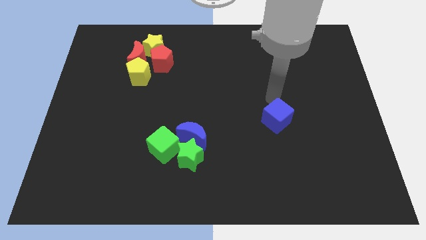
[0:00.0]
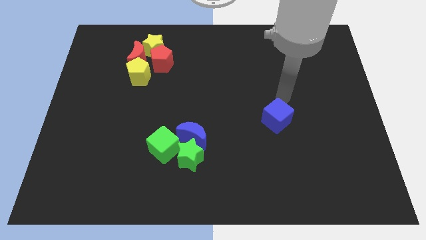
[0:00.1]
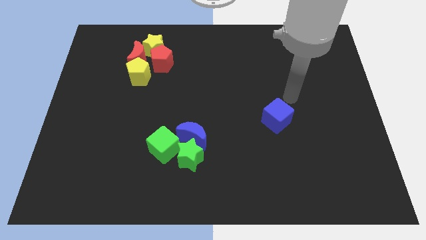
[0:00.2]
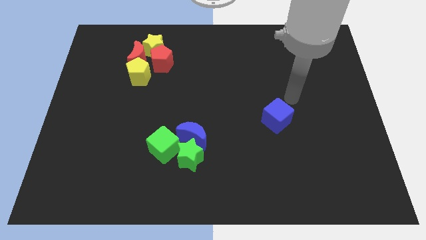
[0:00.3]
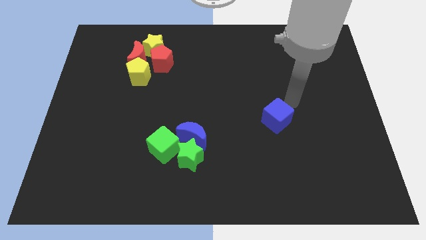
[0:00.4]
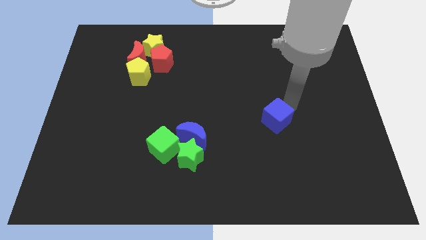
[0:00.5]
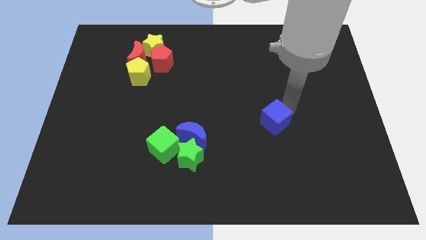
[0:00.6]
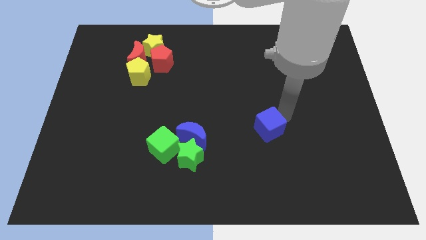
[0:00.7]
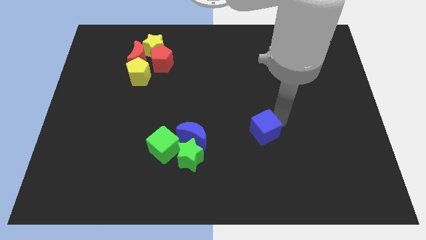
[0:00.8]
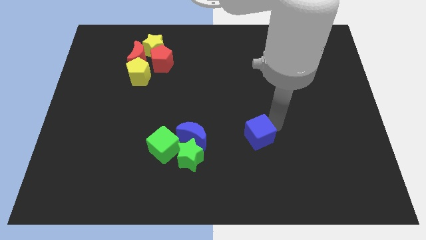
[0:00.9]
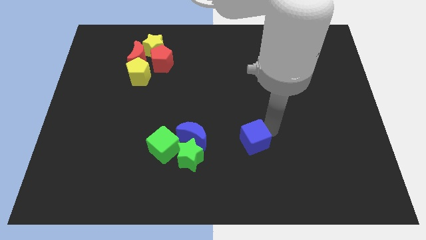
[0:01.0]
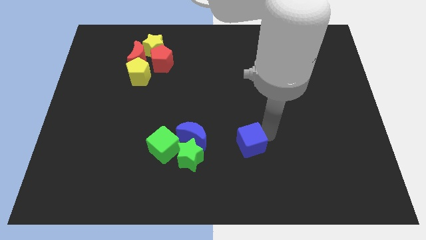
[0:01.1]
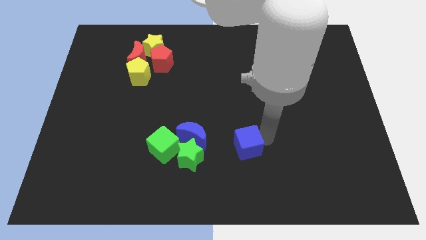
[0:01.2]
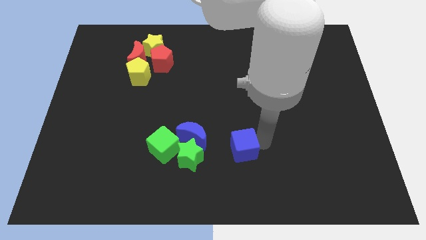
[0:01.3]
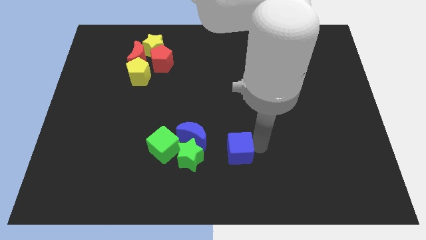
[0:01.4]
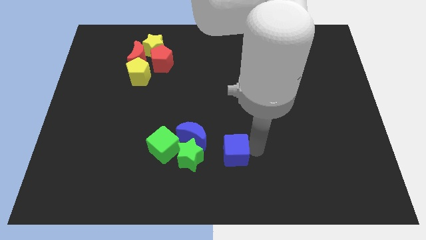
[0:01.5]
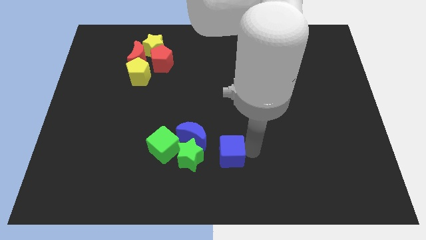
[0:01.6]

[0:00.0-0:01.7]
move the blue cube towards bottom center of the board

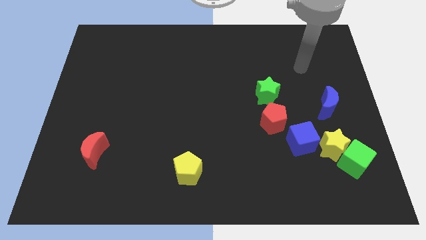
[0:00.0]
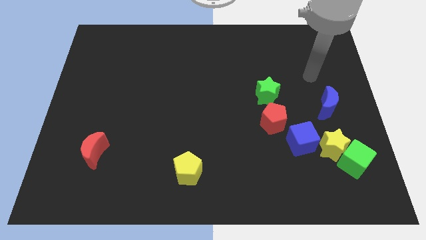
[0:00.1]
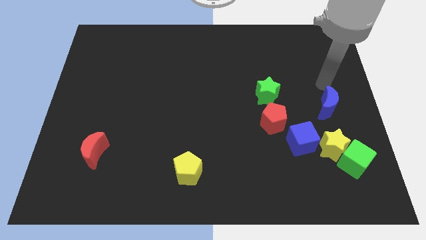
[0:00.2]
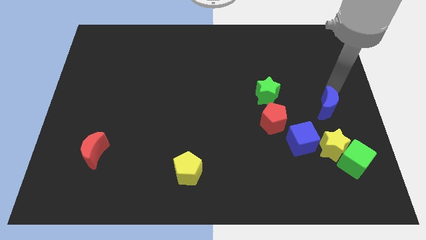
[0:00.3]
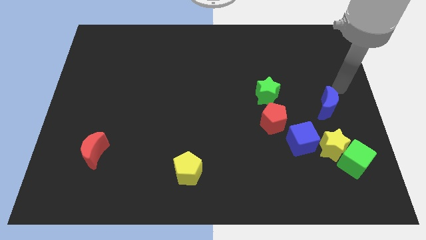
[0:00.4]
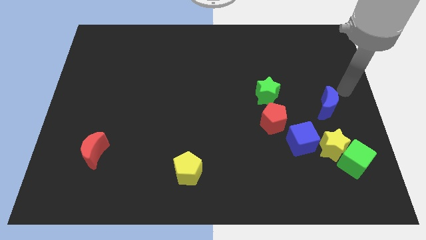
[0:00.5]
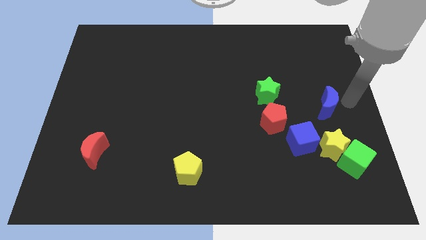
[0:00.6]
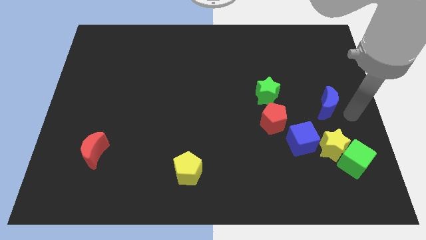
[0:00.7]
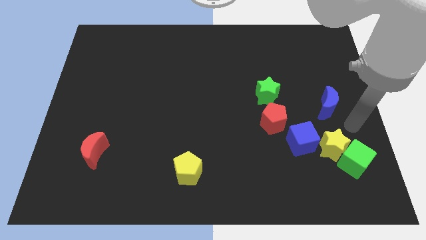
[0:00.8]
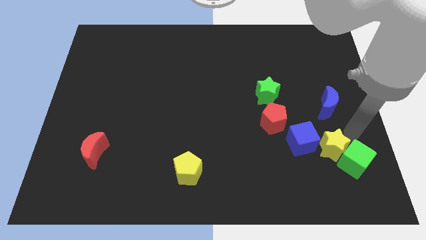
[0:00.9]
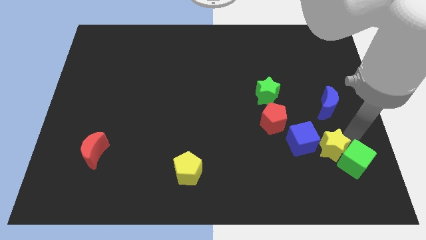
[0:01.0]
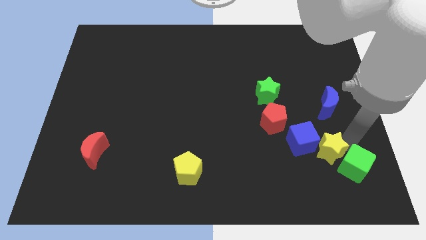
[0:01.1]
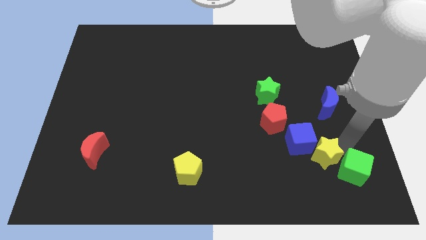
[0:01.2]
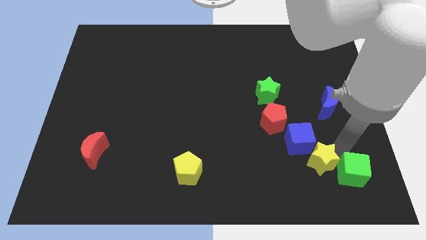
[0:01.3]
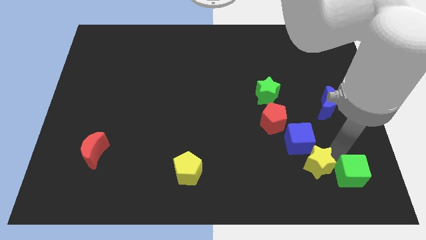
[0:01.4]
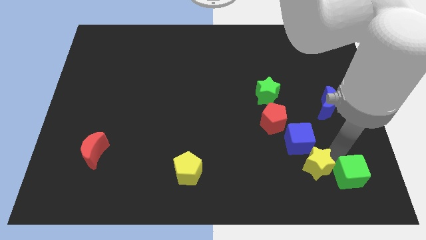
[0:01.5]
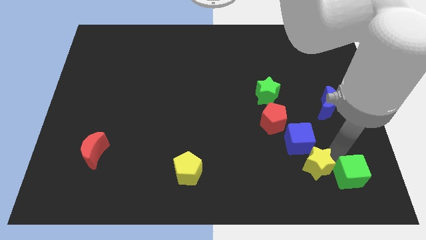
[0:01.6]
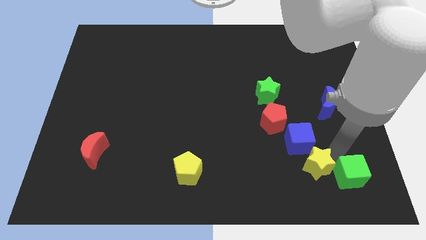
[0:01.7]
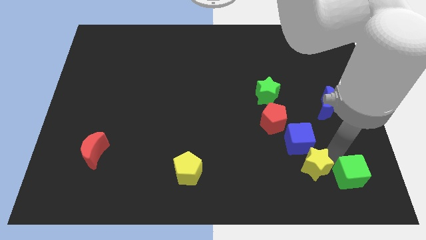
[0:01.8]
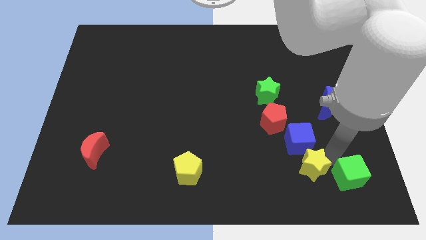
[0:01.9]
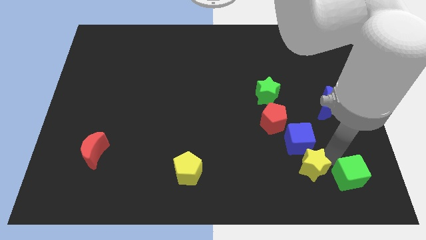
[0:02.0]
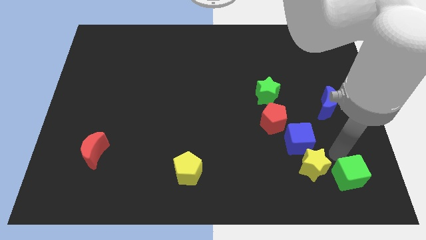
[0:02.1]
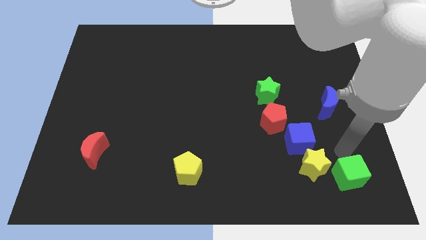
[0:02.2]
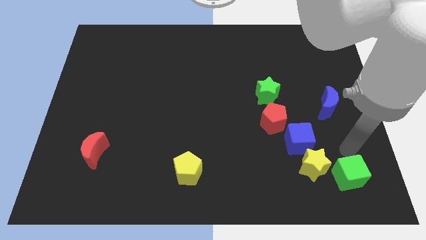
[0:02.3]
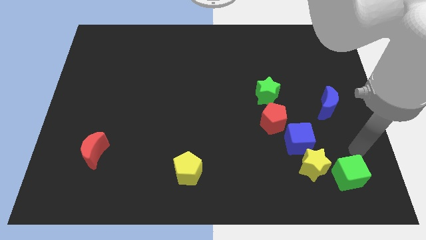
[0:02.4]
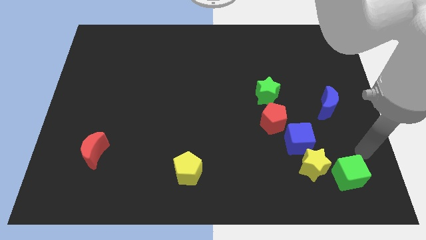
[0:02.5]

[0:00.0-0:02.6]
separate the yellow star from the green cube

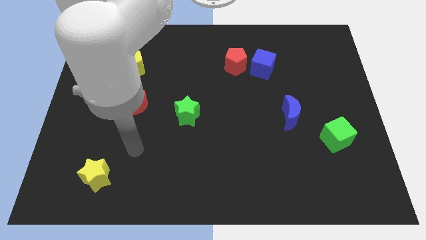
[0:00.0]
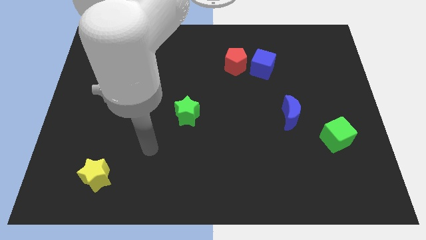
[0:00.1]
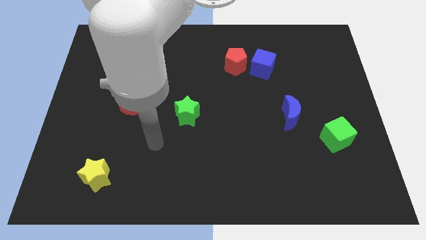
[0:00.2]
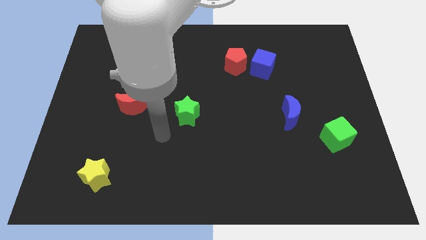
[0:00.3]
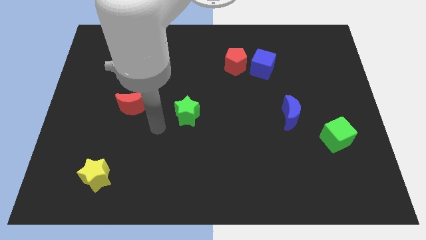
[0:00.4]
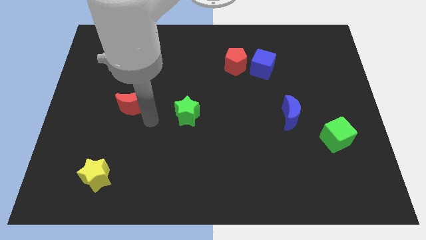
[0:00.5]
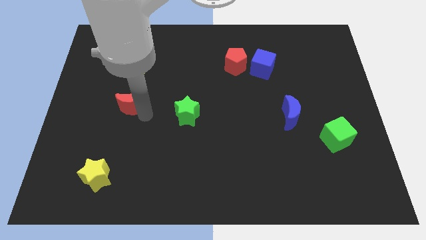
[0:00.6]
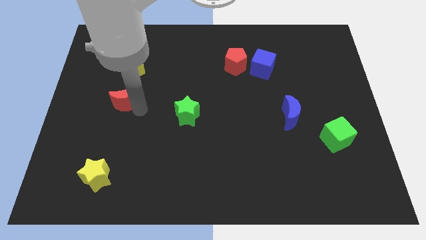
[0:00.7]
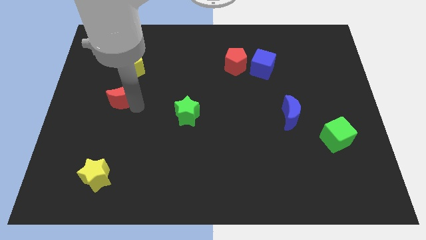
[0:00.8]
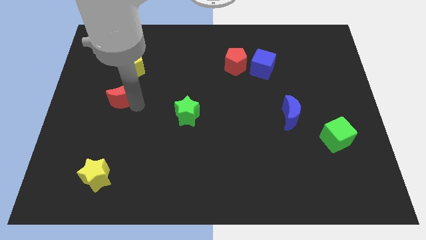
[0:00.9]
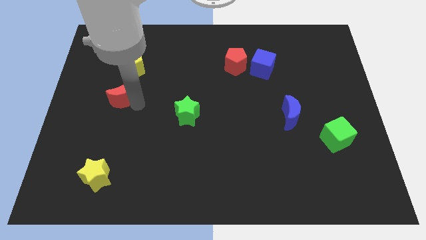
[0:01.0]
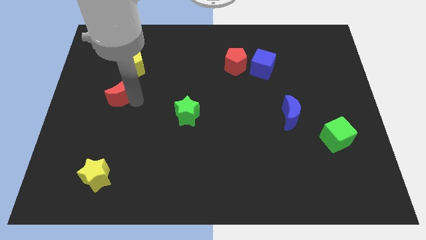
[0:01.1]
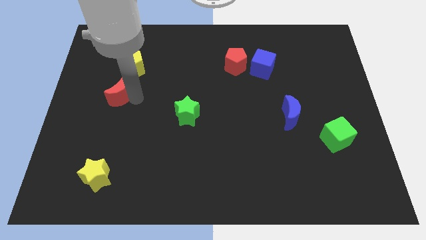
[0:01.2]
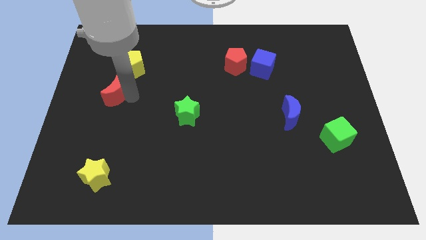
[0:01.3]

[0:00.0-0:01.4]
slightly push the red moon to the left center of the board

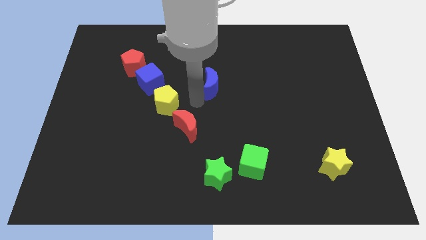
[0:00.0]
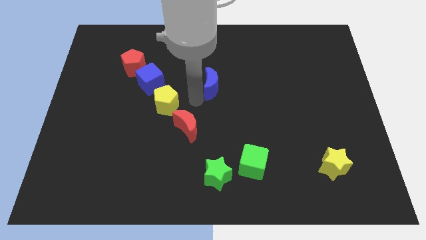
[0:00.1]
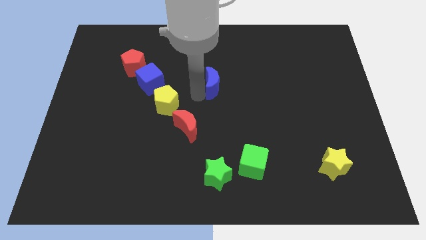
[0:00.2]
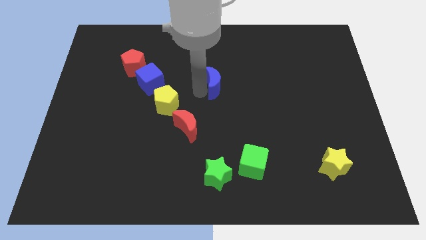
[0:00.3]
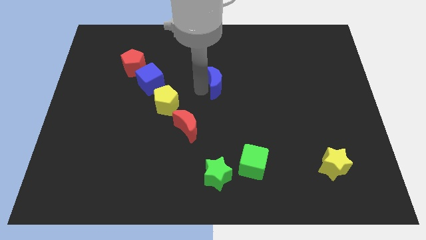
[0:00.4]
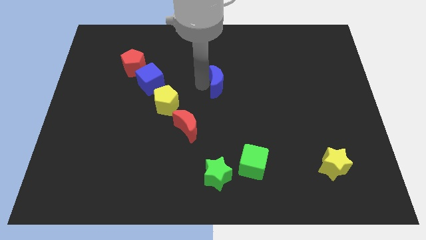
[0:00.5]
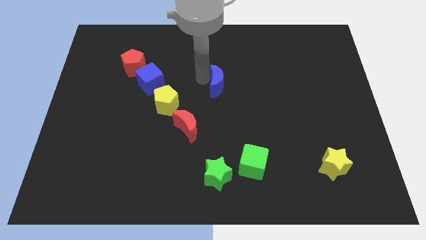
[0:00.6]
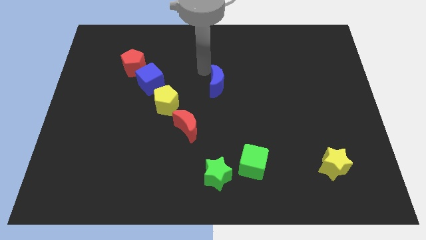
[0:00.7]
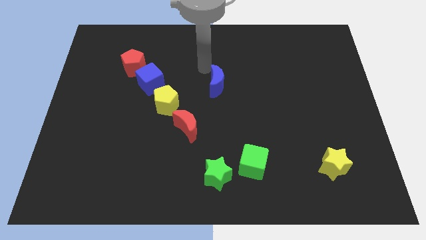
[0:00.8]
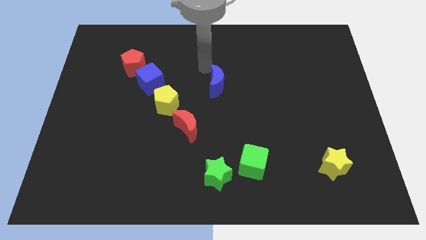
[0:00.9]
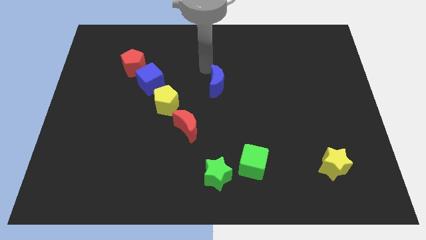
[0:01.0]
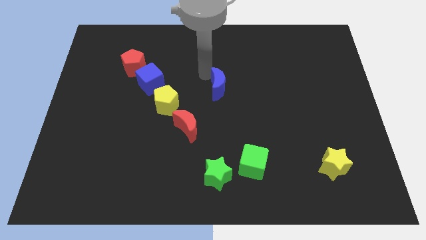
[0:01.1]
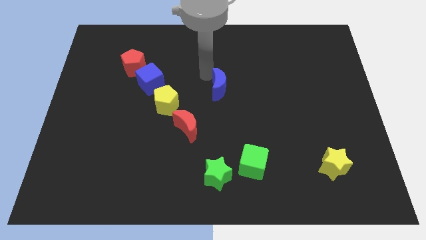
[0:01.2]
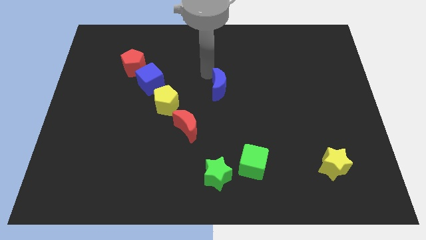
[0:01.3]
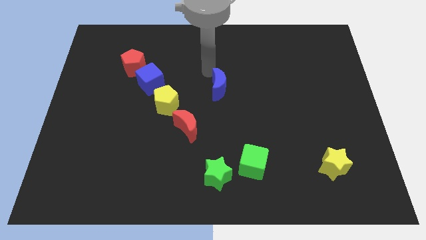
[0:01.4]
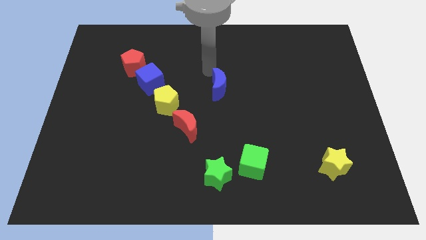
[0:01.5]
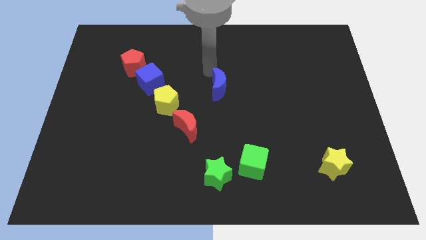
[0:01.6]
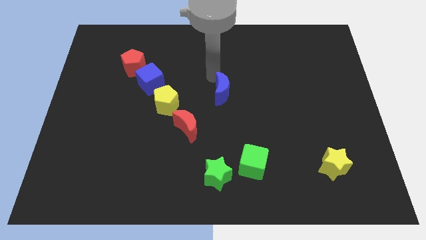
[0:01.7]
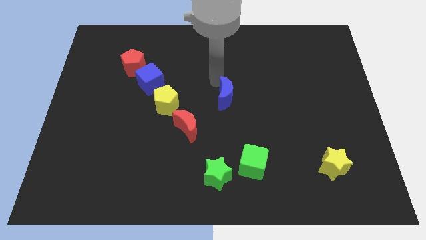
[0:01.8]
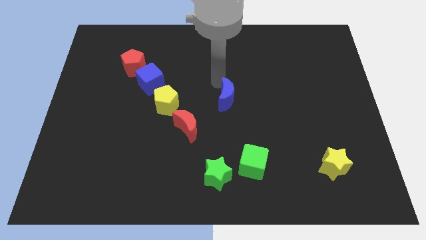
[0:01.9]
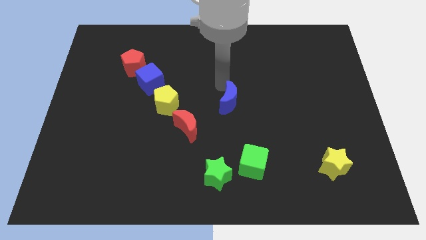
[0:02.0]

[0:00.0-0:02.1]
place the blue moon at the center of the board

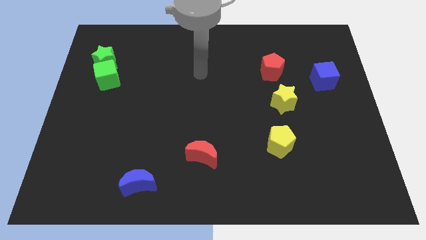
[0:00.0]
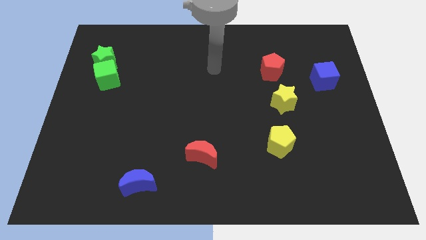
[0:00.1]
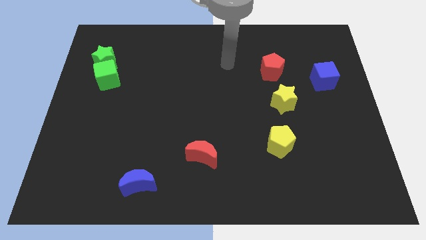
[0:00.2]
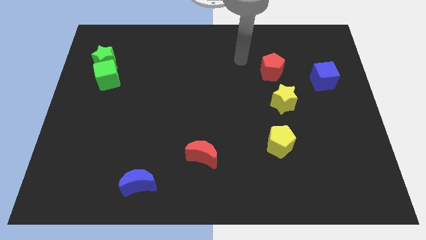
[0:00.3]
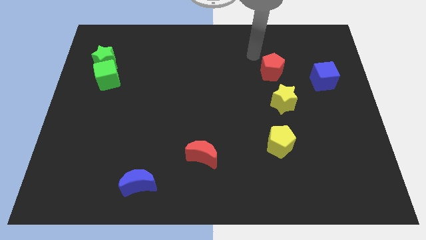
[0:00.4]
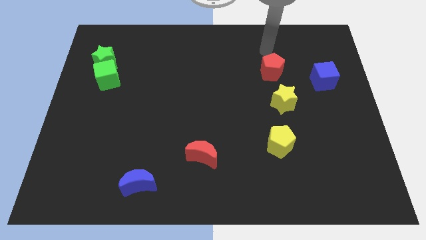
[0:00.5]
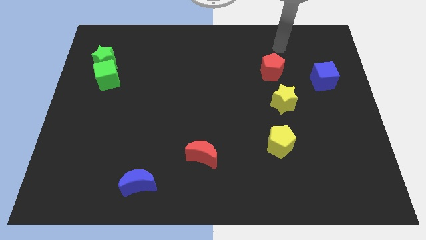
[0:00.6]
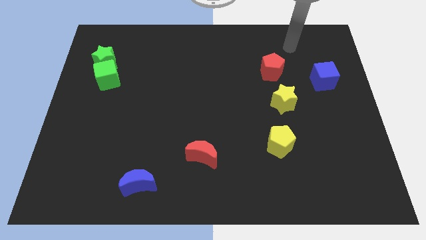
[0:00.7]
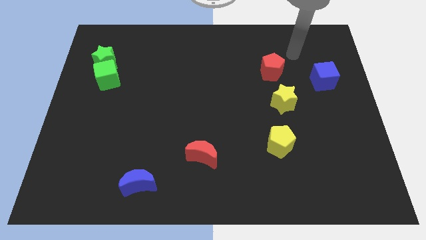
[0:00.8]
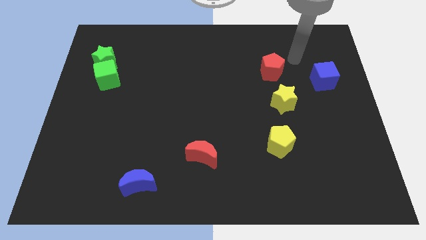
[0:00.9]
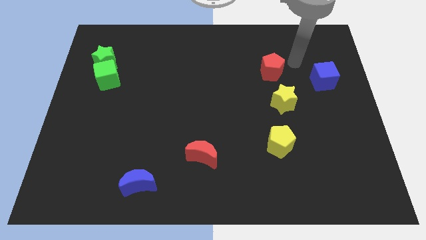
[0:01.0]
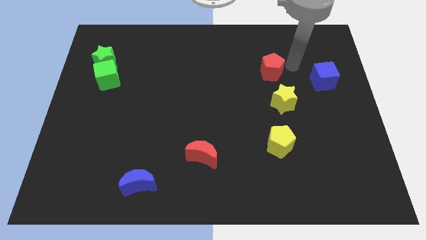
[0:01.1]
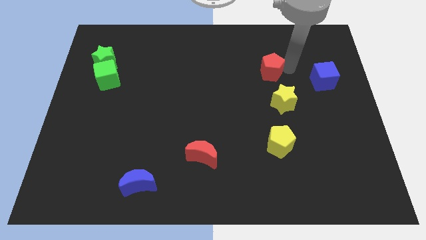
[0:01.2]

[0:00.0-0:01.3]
point your arm at the right of the red pentagon

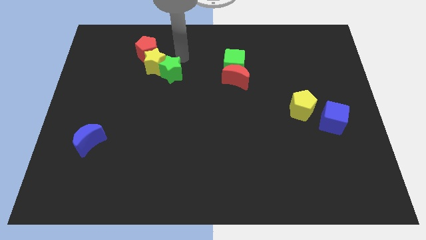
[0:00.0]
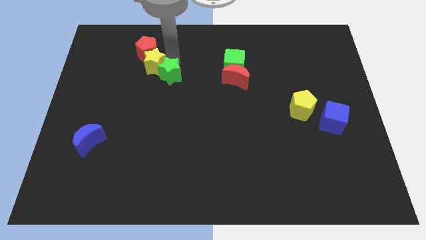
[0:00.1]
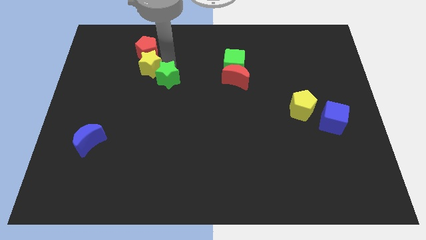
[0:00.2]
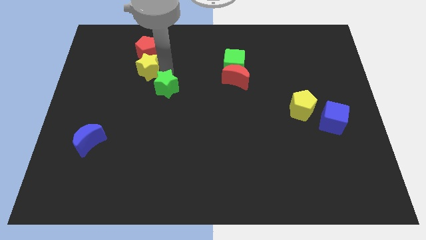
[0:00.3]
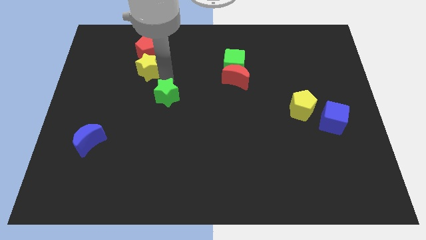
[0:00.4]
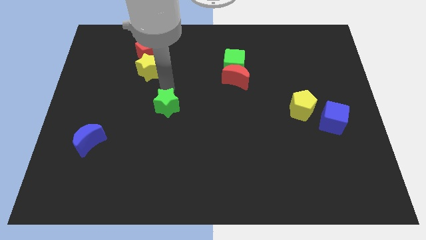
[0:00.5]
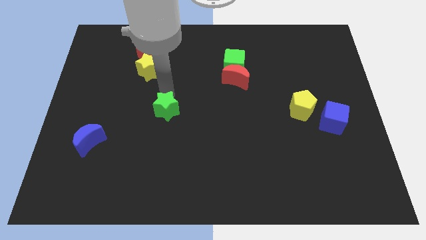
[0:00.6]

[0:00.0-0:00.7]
separate the green star from the yellow star